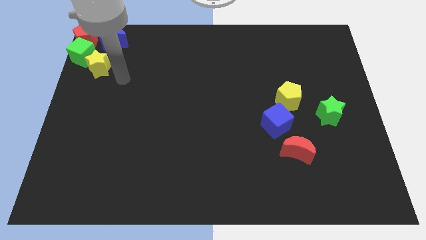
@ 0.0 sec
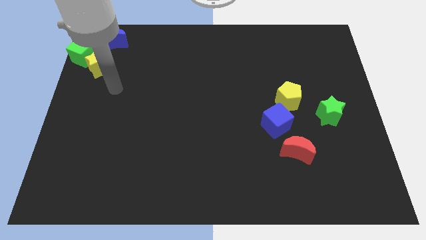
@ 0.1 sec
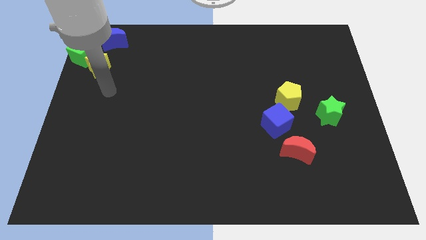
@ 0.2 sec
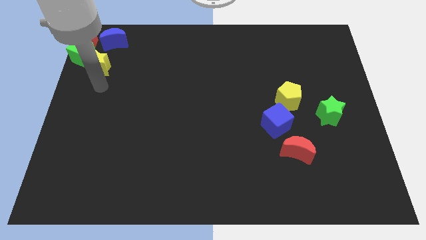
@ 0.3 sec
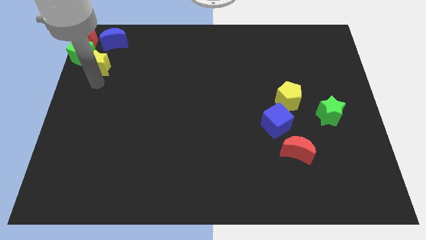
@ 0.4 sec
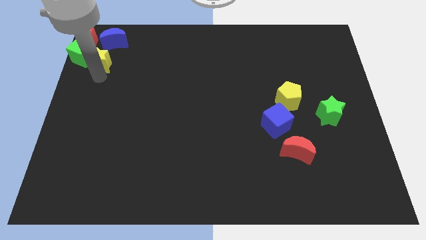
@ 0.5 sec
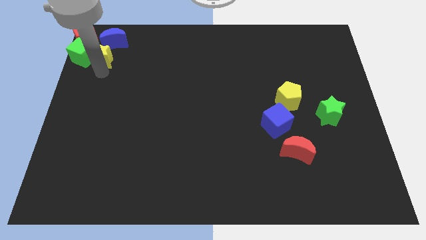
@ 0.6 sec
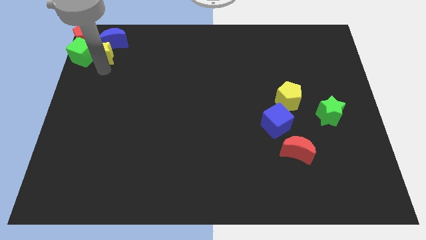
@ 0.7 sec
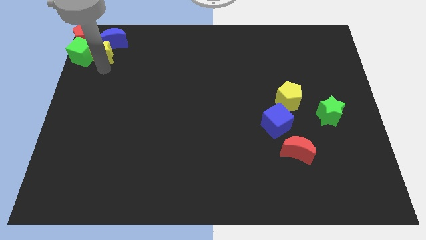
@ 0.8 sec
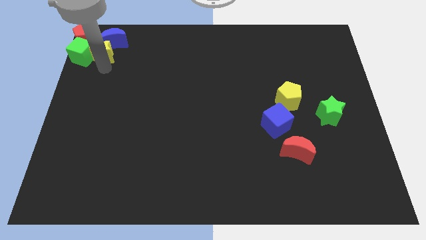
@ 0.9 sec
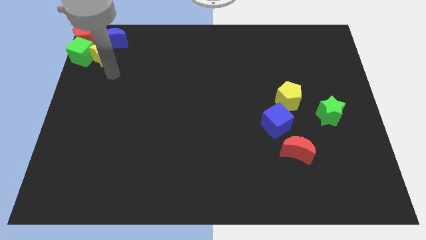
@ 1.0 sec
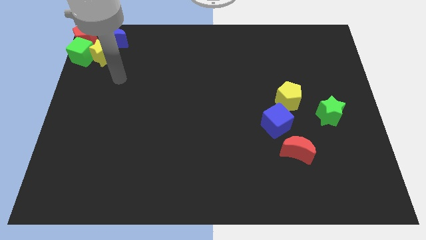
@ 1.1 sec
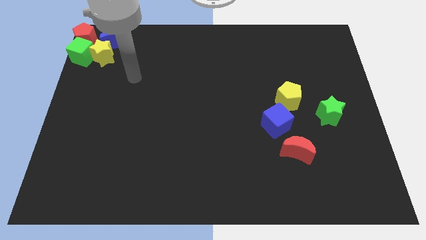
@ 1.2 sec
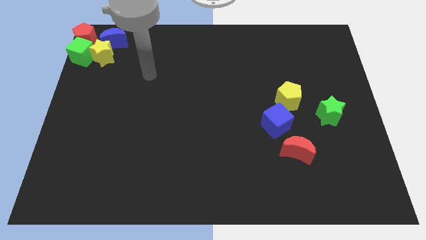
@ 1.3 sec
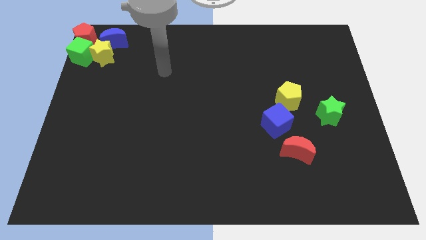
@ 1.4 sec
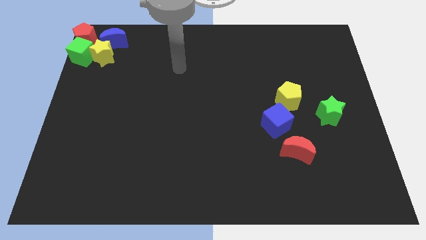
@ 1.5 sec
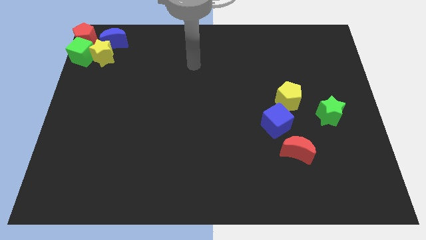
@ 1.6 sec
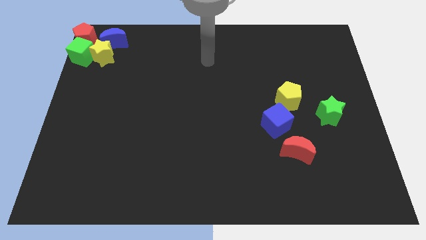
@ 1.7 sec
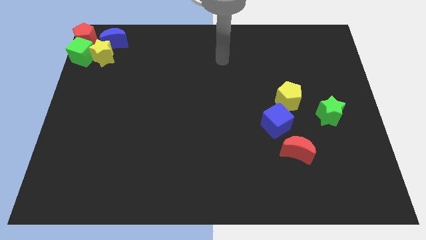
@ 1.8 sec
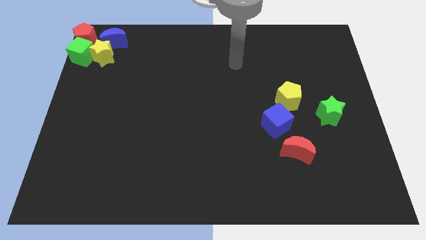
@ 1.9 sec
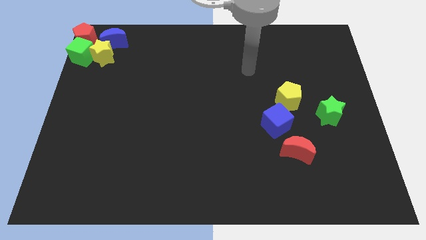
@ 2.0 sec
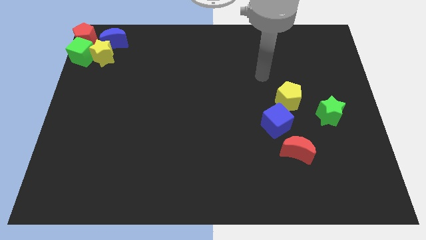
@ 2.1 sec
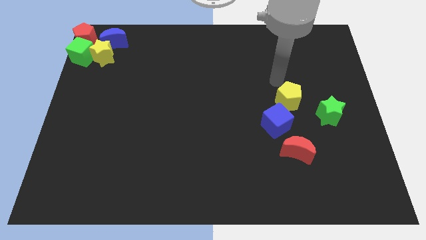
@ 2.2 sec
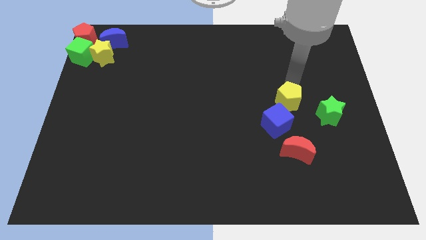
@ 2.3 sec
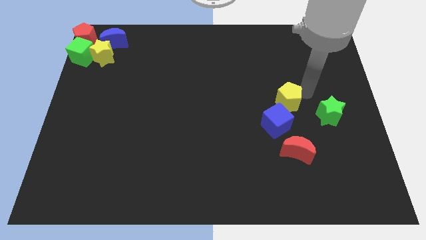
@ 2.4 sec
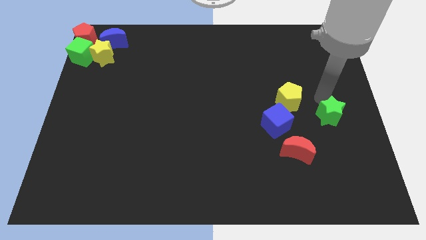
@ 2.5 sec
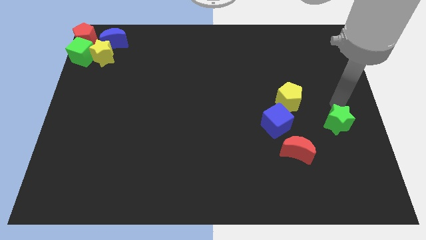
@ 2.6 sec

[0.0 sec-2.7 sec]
point your arm above green star

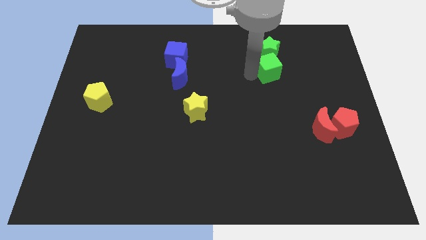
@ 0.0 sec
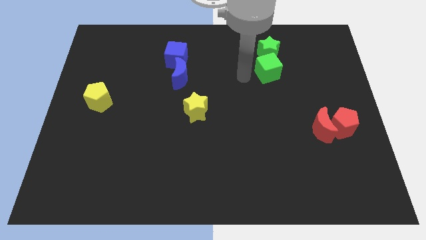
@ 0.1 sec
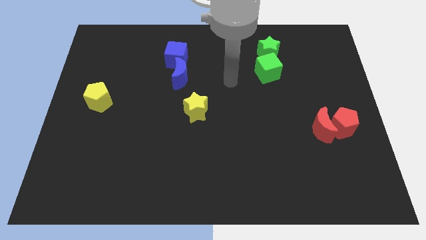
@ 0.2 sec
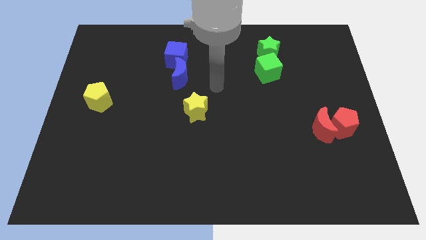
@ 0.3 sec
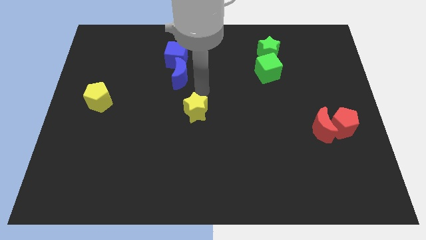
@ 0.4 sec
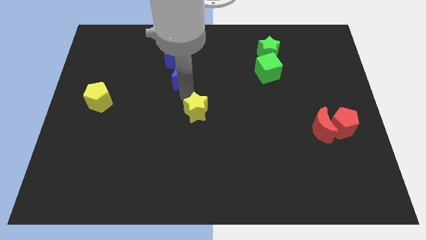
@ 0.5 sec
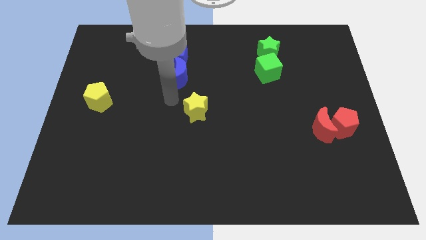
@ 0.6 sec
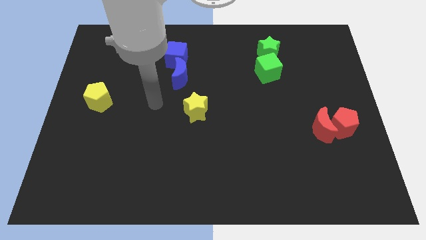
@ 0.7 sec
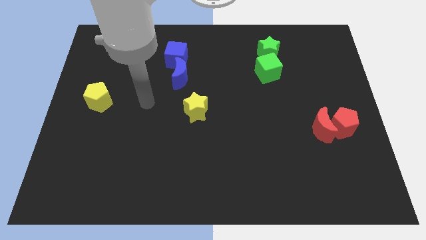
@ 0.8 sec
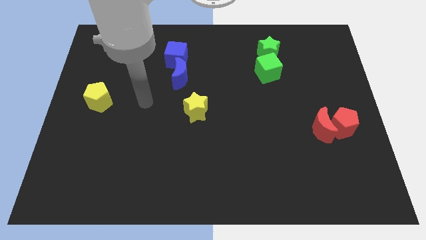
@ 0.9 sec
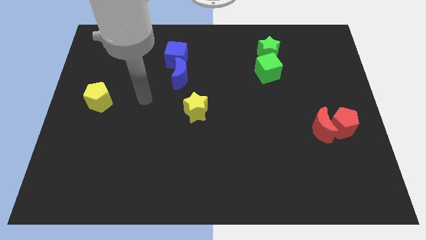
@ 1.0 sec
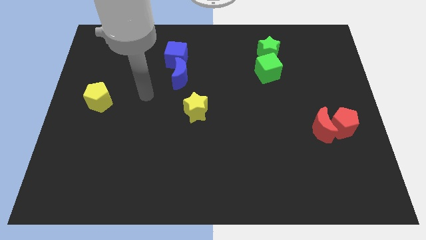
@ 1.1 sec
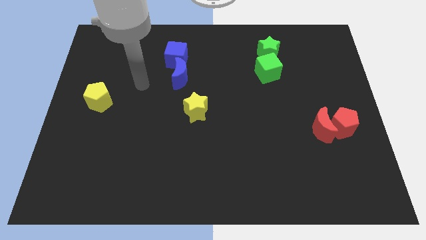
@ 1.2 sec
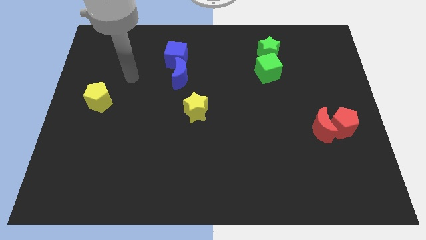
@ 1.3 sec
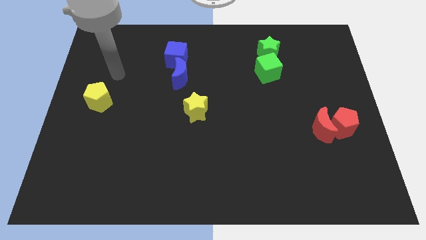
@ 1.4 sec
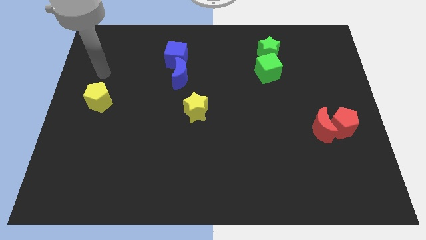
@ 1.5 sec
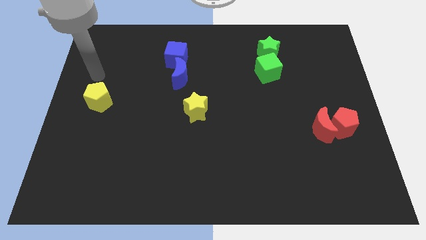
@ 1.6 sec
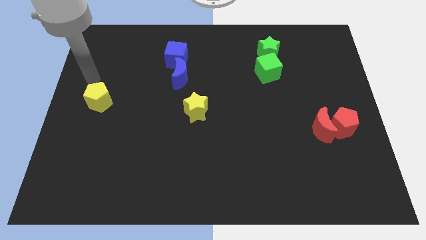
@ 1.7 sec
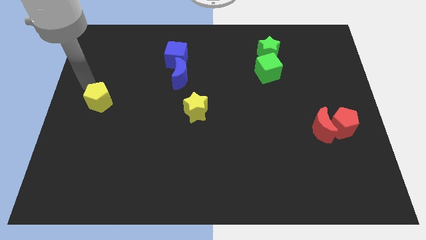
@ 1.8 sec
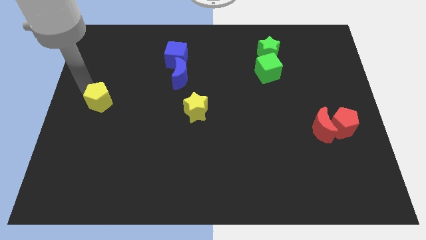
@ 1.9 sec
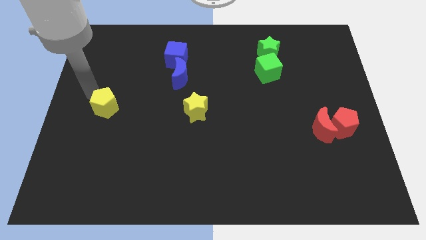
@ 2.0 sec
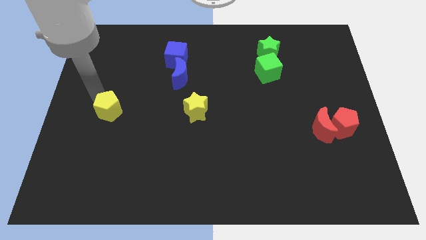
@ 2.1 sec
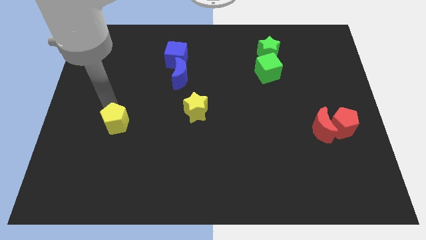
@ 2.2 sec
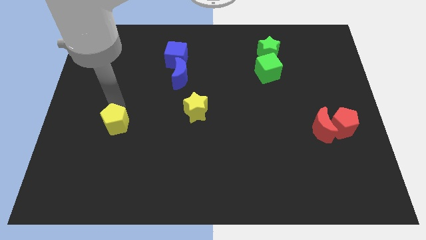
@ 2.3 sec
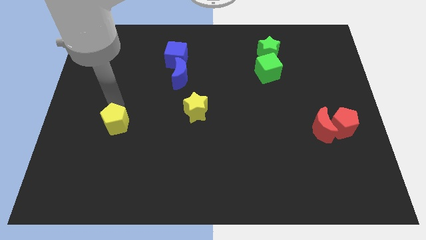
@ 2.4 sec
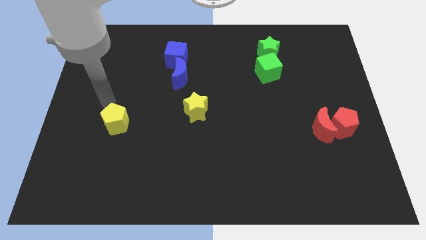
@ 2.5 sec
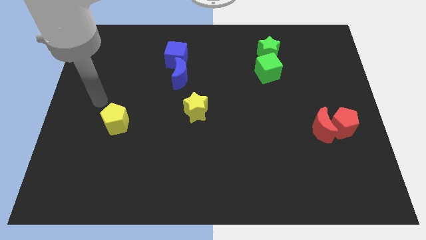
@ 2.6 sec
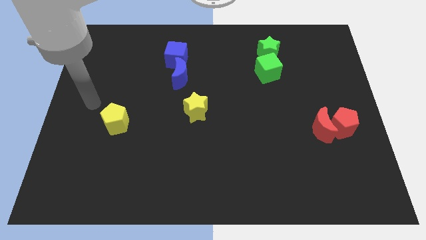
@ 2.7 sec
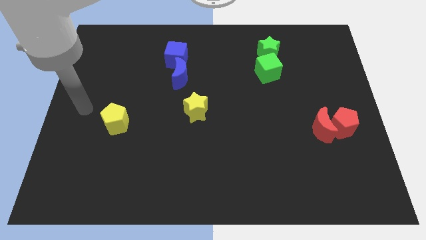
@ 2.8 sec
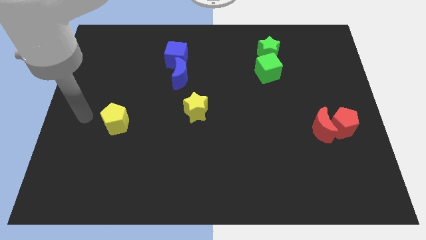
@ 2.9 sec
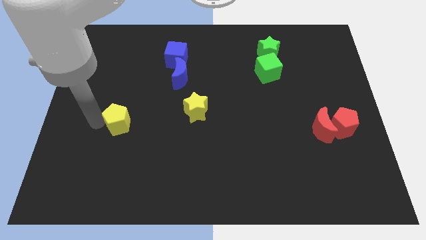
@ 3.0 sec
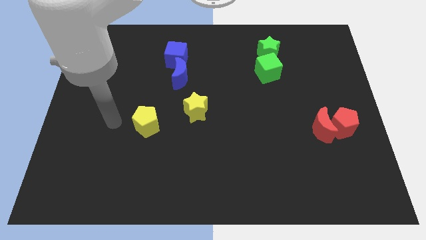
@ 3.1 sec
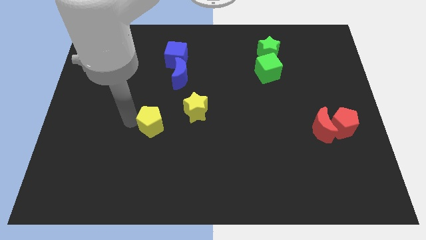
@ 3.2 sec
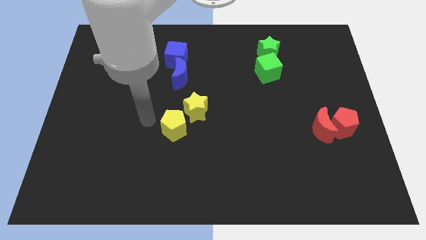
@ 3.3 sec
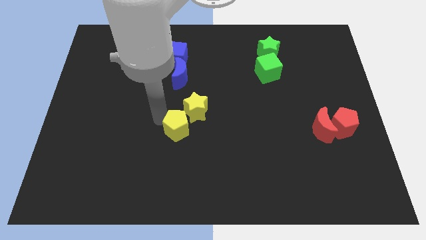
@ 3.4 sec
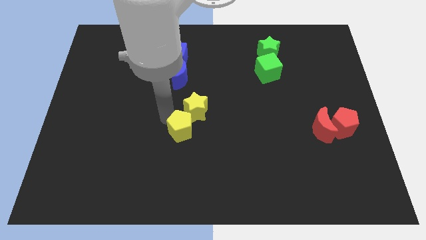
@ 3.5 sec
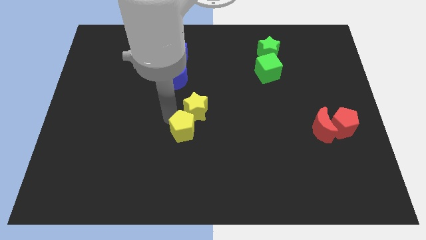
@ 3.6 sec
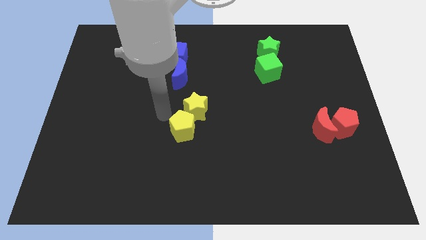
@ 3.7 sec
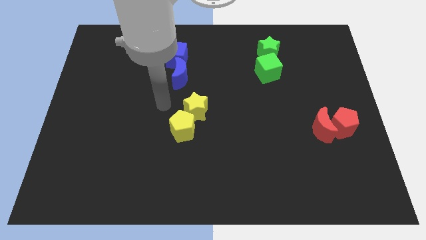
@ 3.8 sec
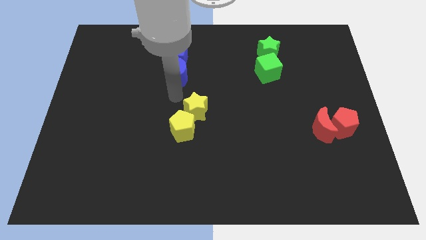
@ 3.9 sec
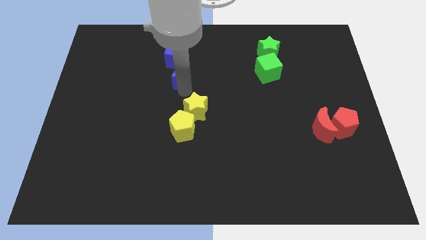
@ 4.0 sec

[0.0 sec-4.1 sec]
place the yellow pentagon diagonally to the yellow star

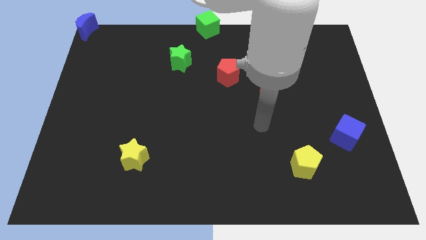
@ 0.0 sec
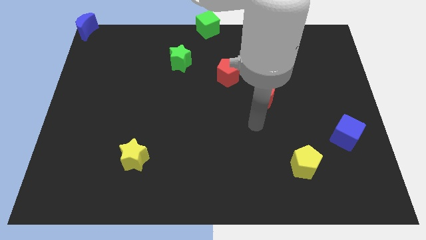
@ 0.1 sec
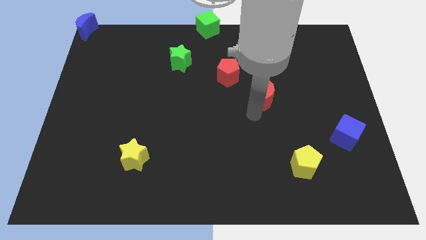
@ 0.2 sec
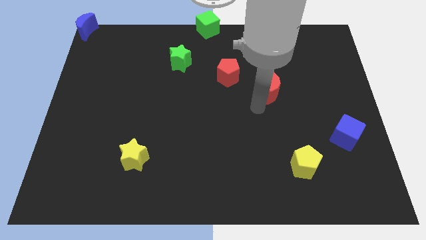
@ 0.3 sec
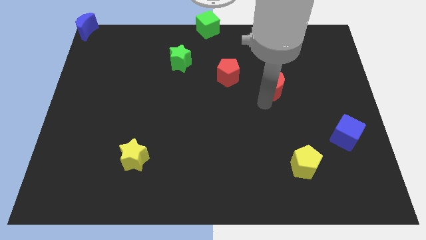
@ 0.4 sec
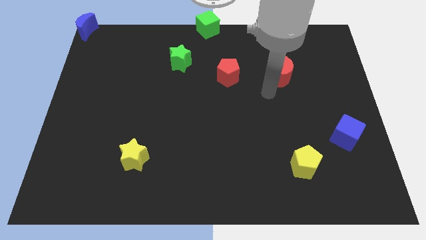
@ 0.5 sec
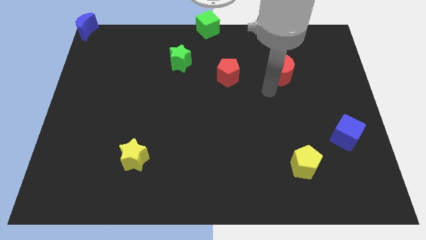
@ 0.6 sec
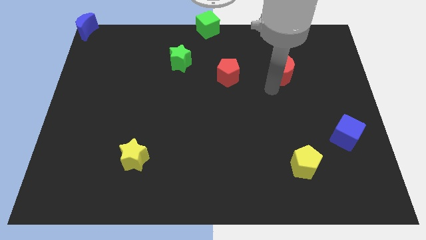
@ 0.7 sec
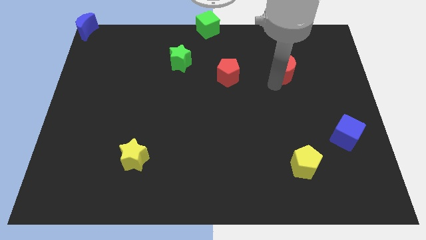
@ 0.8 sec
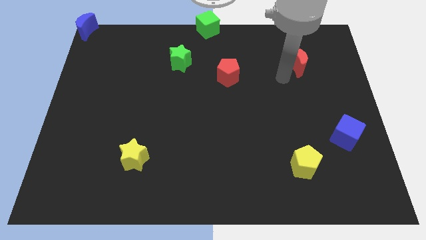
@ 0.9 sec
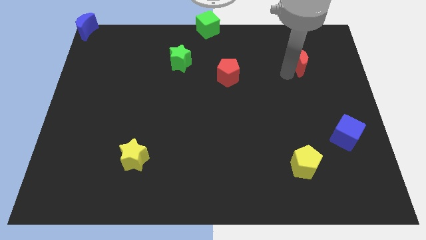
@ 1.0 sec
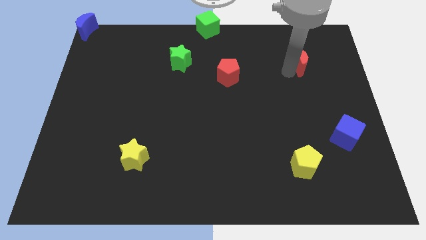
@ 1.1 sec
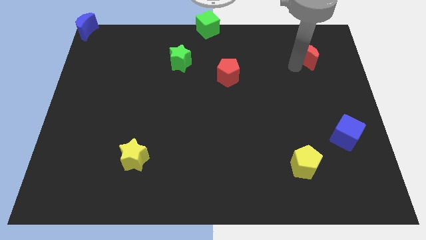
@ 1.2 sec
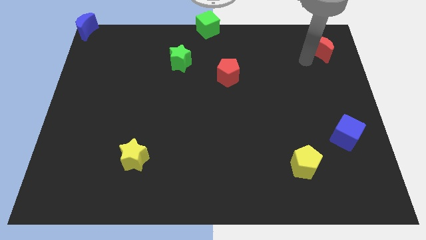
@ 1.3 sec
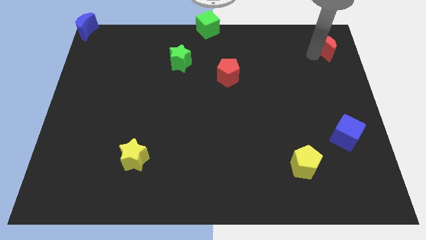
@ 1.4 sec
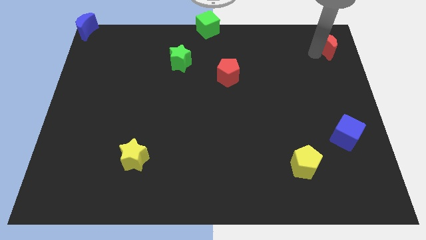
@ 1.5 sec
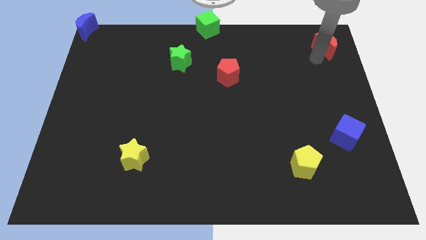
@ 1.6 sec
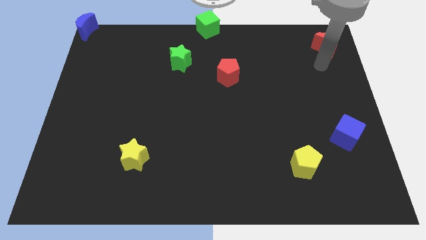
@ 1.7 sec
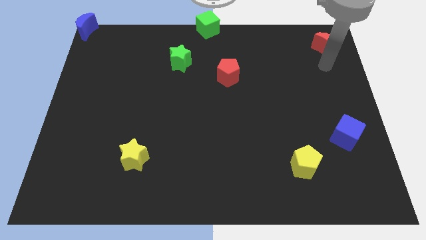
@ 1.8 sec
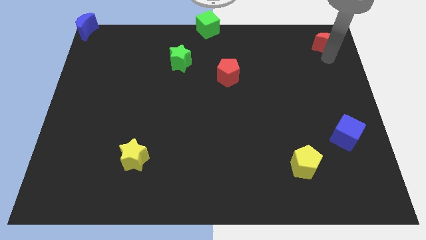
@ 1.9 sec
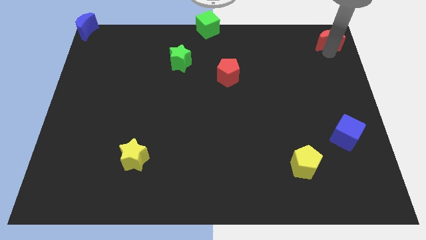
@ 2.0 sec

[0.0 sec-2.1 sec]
push the red crescent to the top right
